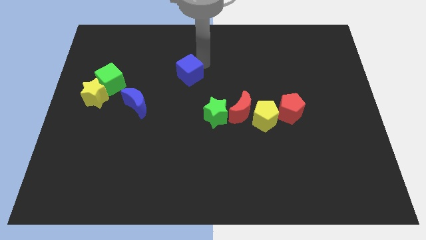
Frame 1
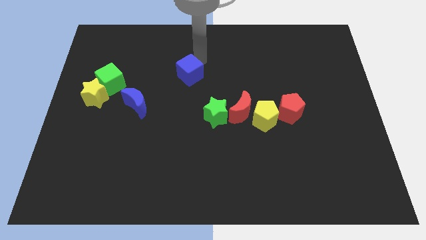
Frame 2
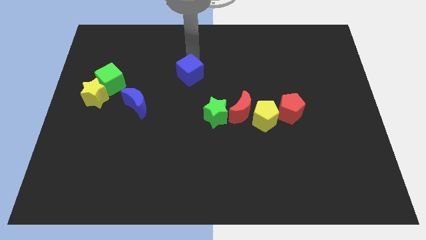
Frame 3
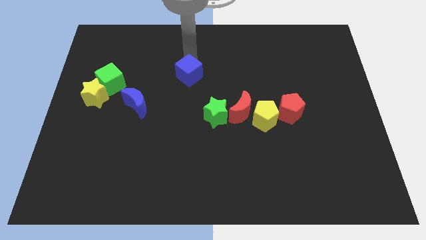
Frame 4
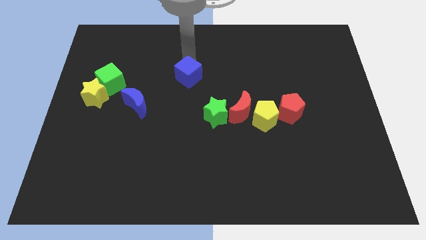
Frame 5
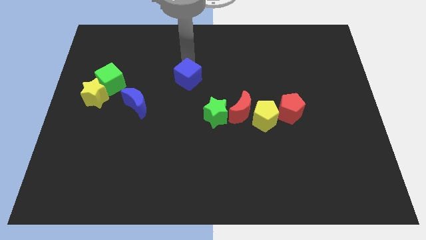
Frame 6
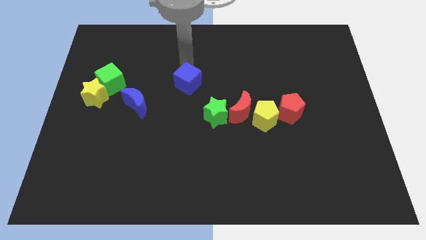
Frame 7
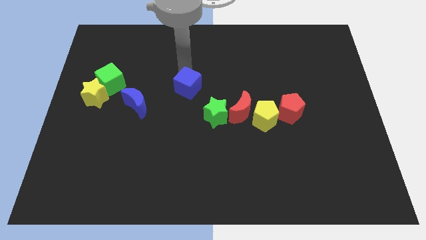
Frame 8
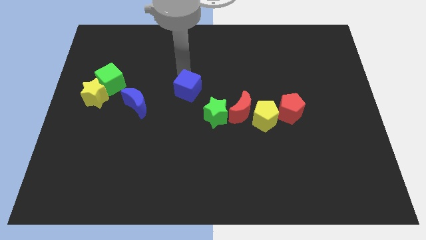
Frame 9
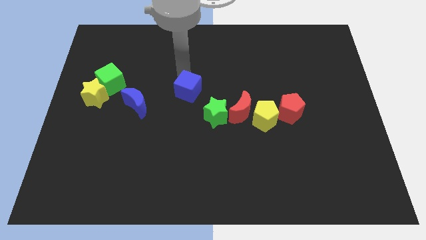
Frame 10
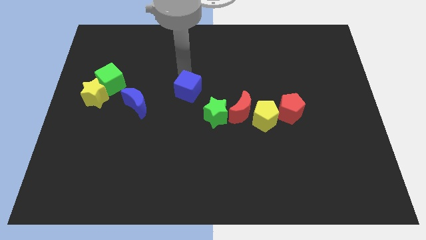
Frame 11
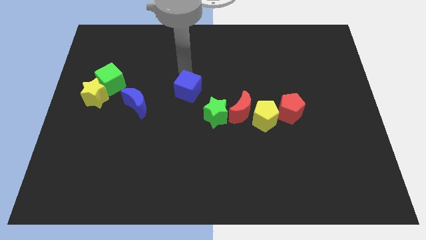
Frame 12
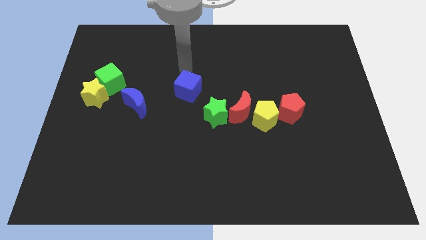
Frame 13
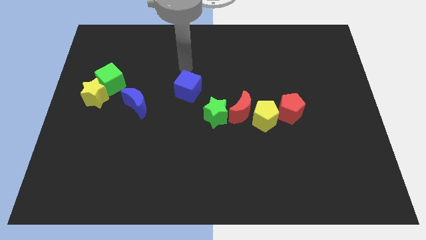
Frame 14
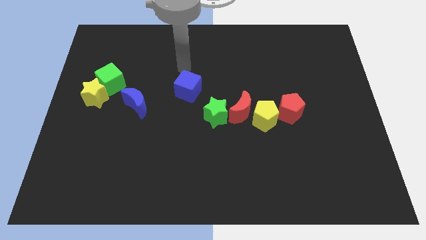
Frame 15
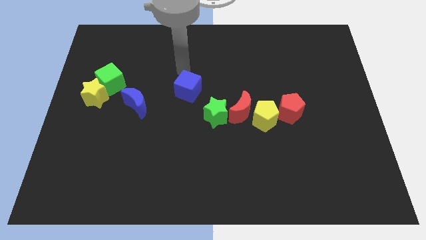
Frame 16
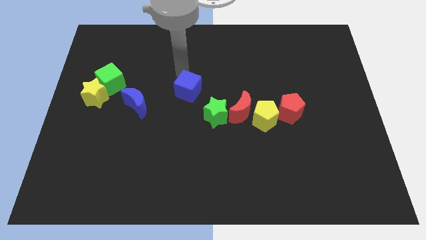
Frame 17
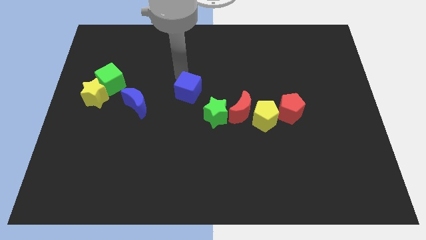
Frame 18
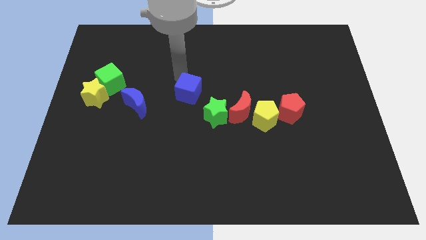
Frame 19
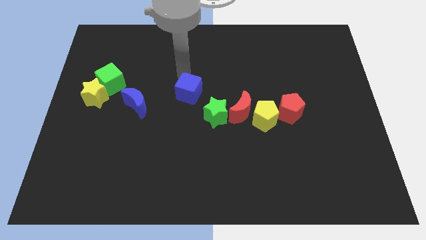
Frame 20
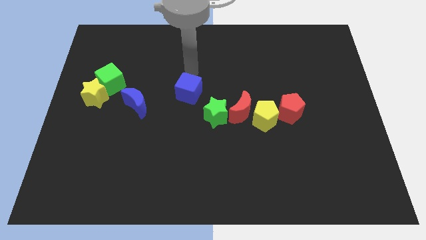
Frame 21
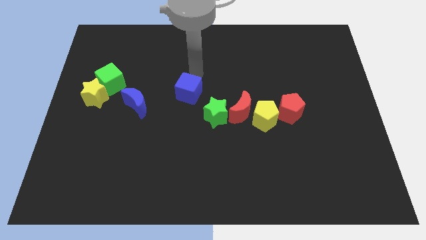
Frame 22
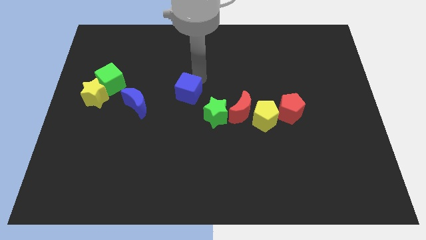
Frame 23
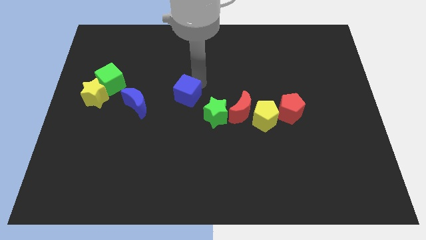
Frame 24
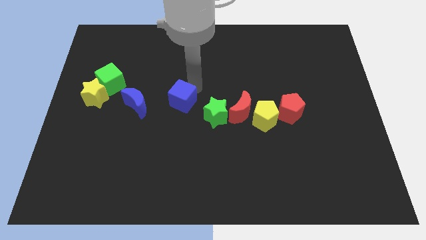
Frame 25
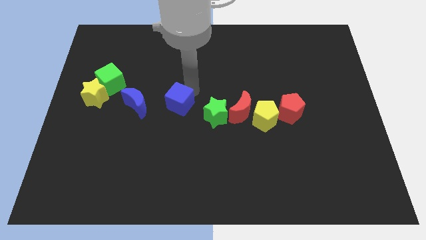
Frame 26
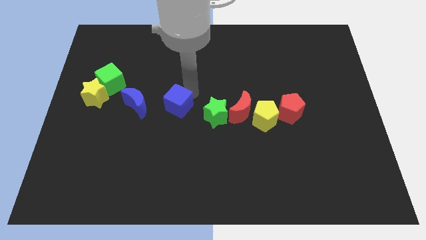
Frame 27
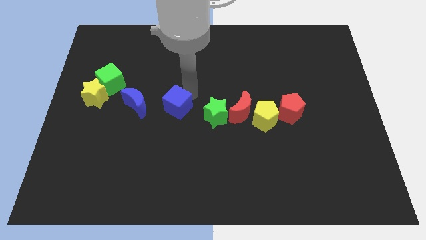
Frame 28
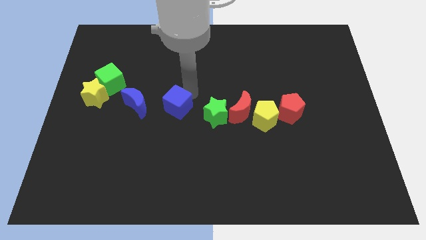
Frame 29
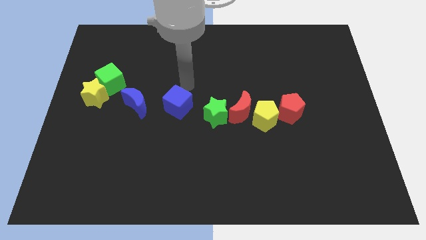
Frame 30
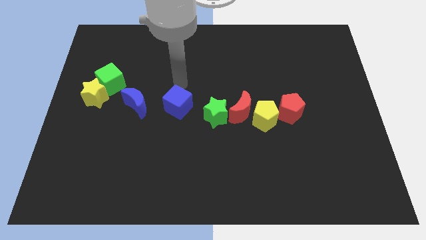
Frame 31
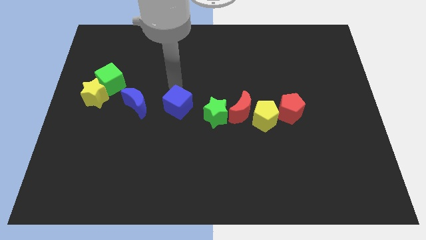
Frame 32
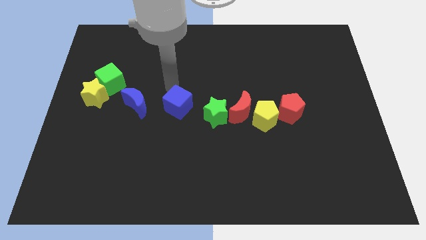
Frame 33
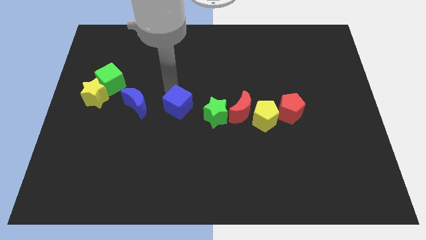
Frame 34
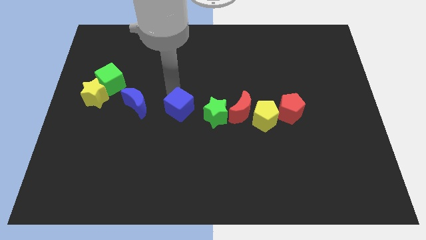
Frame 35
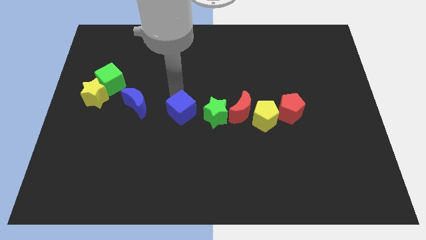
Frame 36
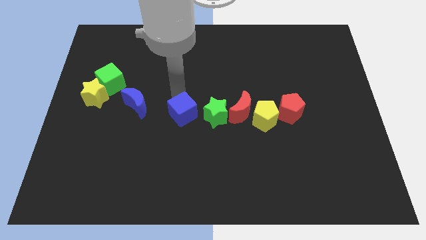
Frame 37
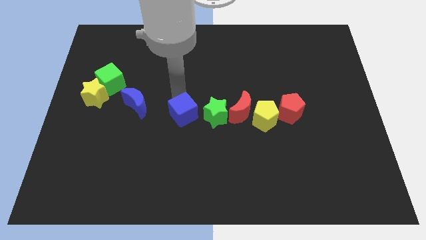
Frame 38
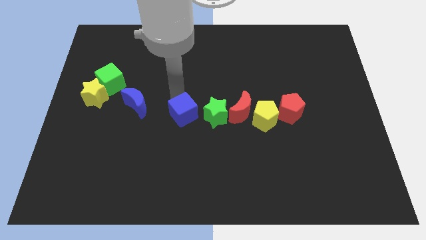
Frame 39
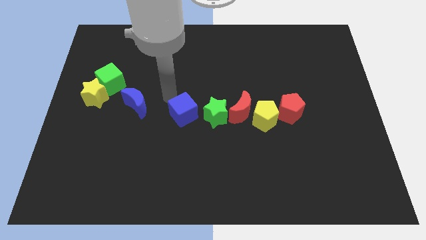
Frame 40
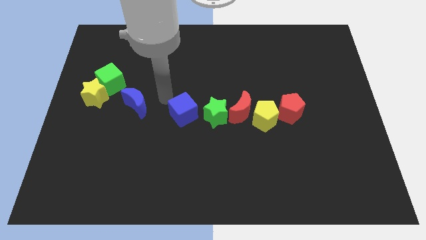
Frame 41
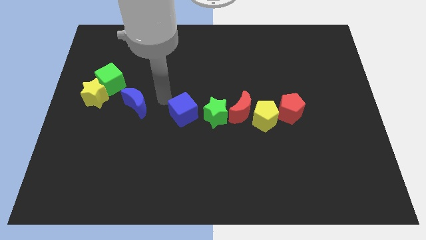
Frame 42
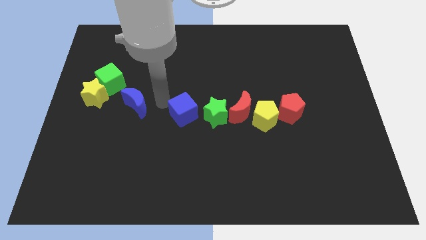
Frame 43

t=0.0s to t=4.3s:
place the blue cube between the green star and blue moon

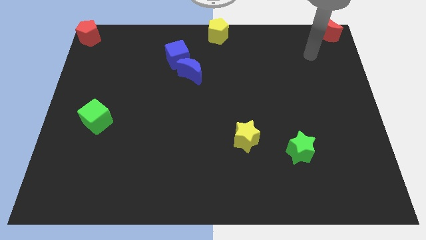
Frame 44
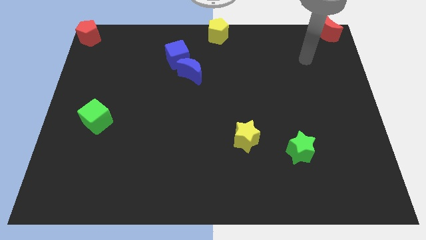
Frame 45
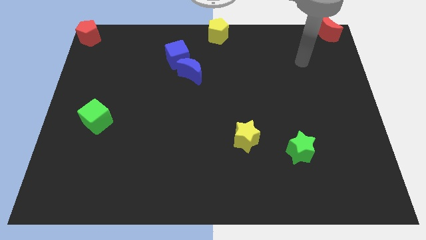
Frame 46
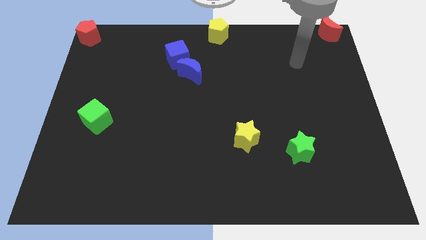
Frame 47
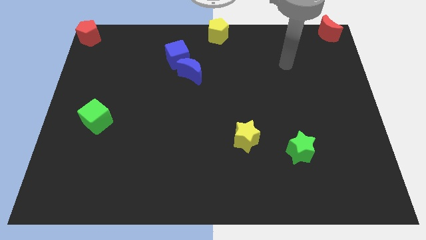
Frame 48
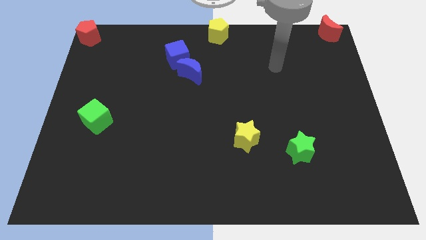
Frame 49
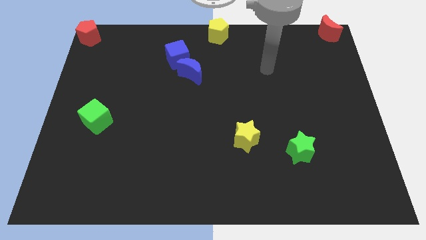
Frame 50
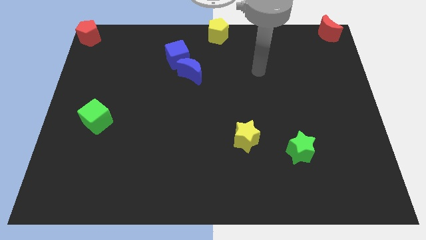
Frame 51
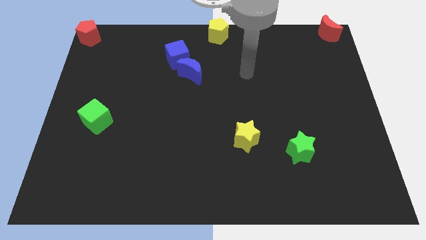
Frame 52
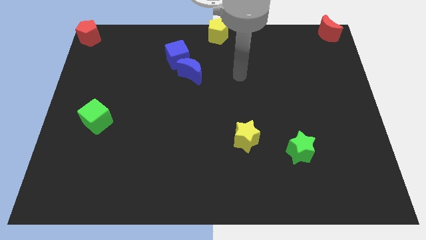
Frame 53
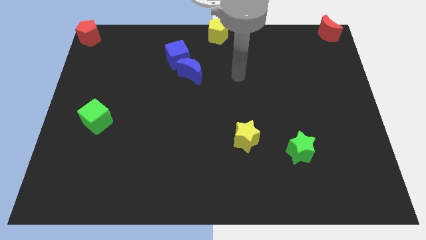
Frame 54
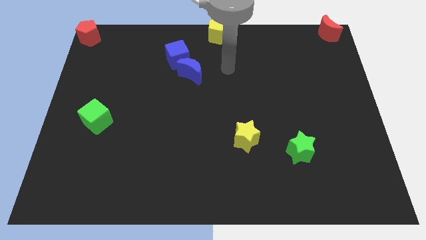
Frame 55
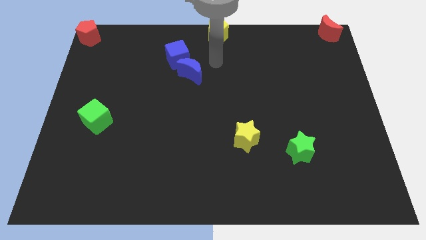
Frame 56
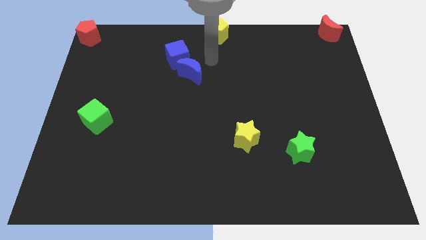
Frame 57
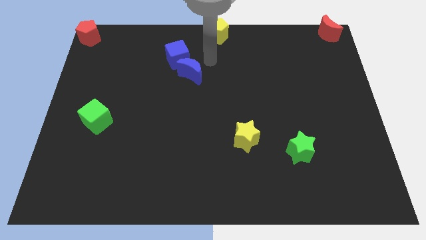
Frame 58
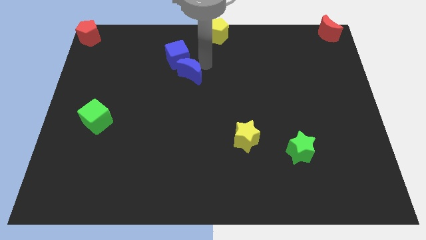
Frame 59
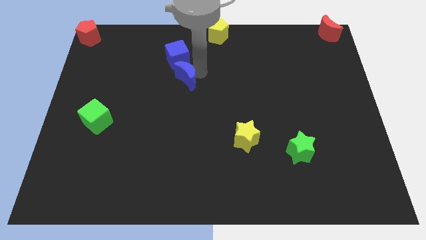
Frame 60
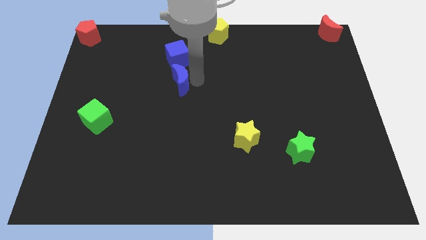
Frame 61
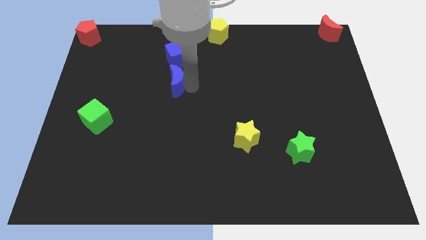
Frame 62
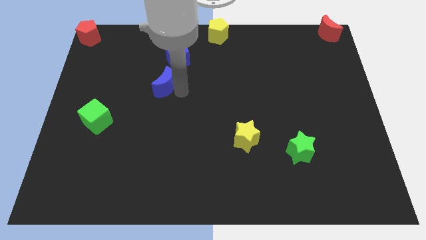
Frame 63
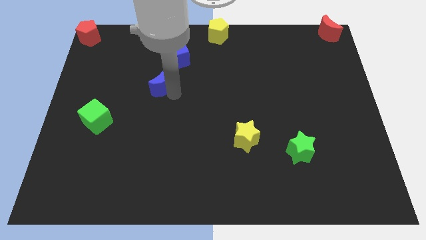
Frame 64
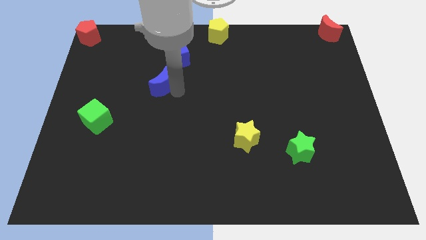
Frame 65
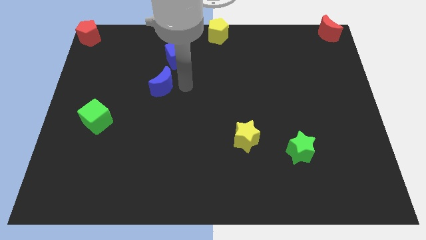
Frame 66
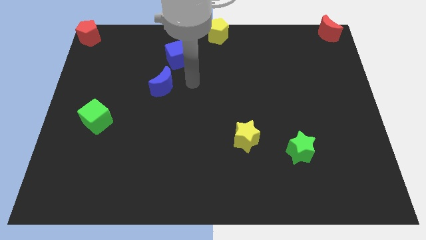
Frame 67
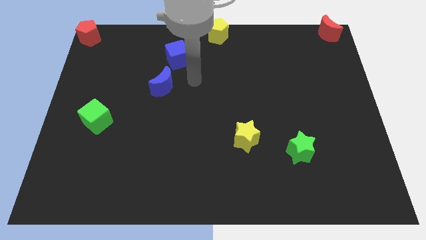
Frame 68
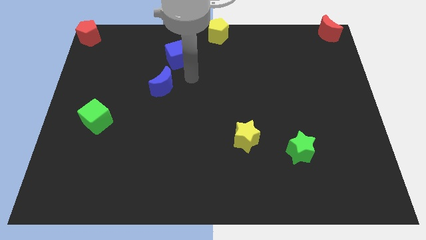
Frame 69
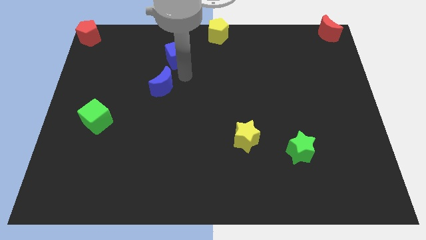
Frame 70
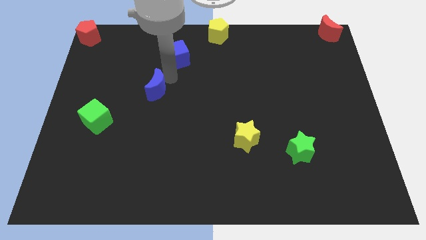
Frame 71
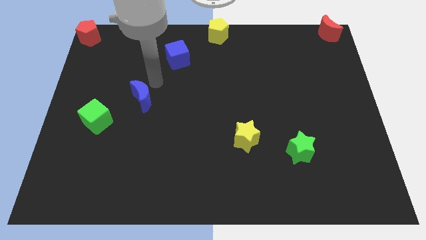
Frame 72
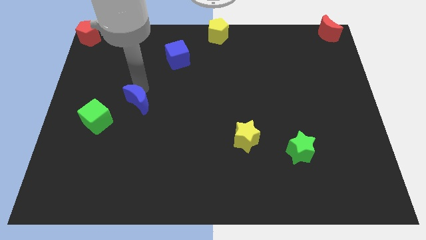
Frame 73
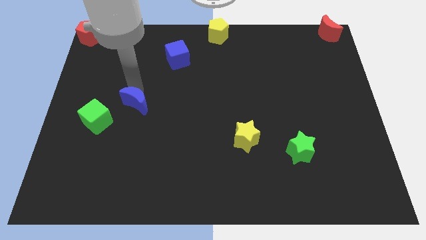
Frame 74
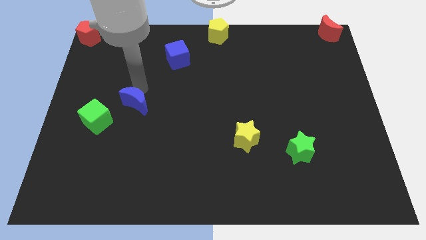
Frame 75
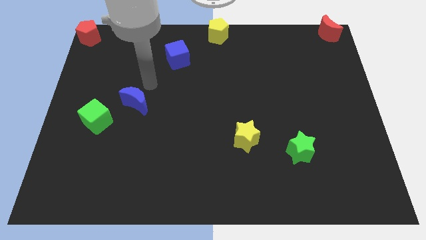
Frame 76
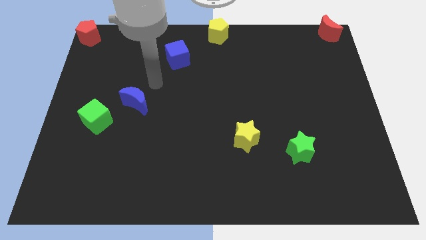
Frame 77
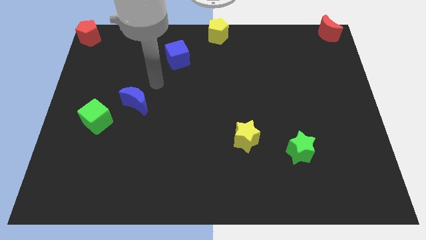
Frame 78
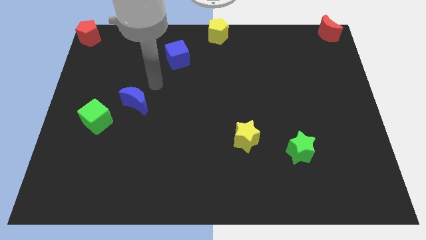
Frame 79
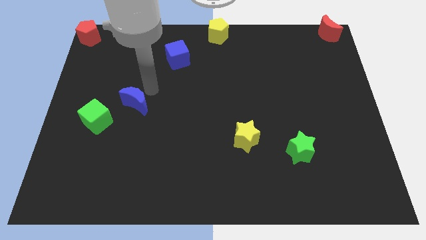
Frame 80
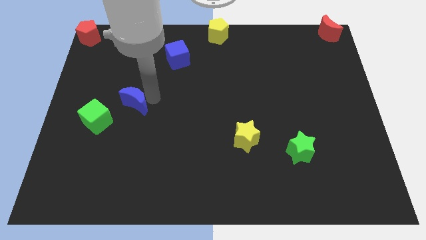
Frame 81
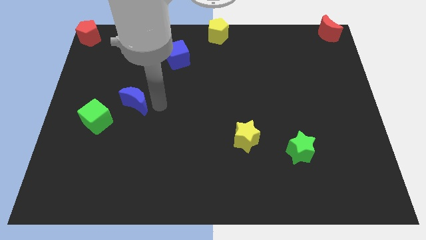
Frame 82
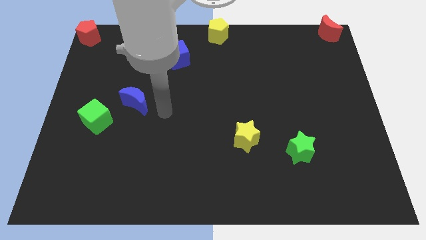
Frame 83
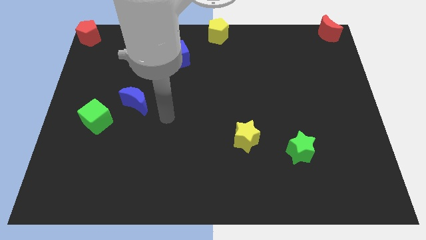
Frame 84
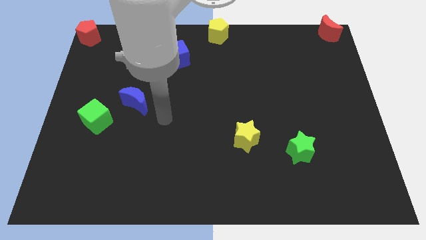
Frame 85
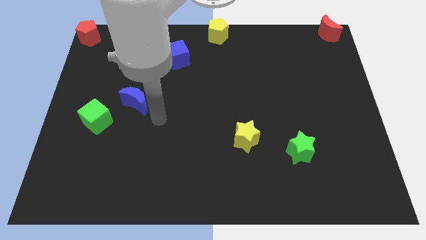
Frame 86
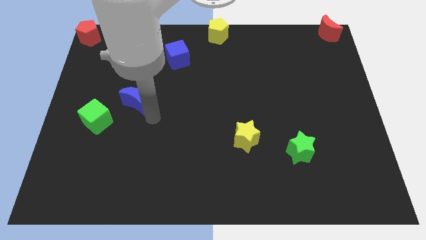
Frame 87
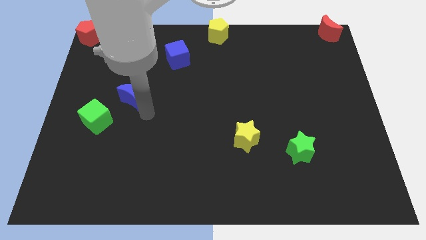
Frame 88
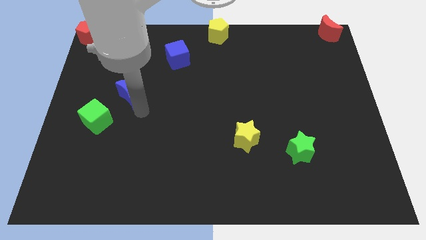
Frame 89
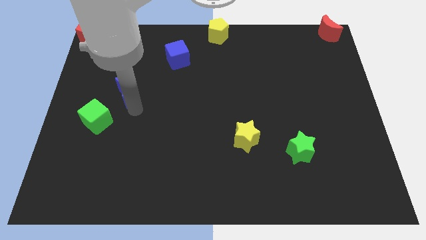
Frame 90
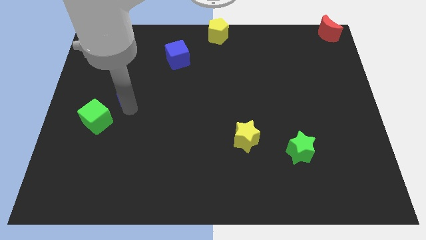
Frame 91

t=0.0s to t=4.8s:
put the blue crescent above the green cube
